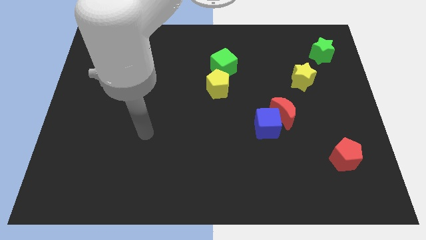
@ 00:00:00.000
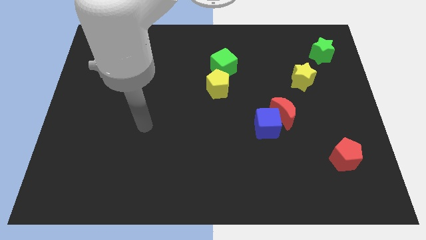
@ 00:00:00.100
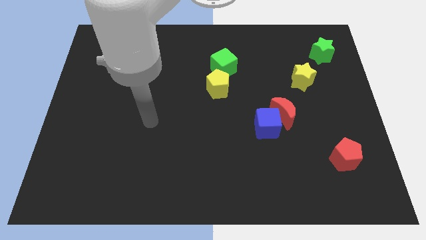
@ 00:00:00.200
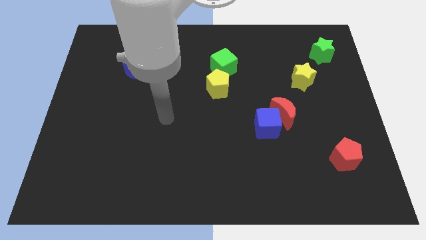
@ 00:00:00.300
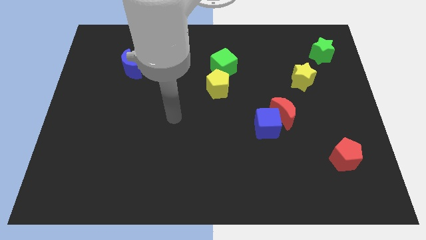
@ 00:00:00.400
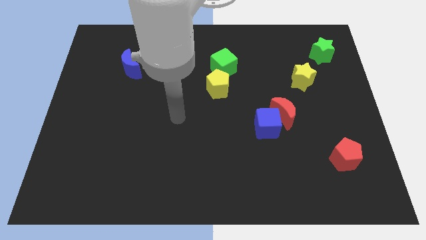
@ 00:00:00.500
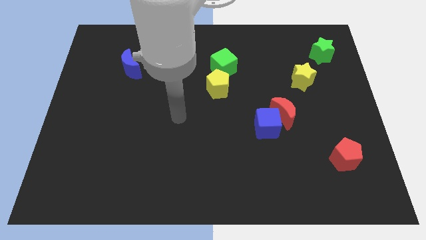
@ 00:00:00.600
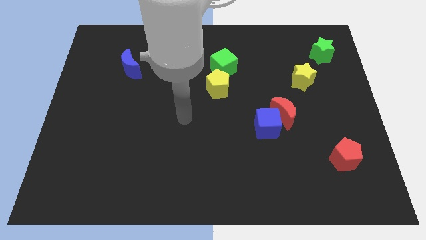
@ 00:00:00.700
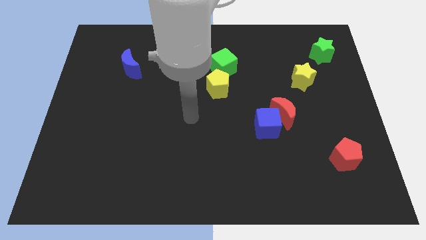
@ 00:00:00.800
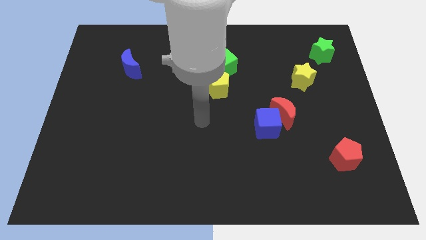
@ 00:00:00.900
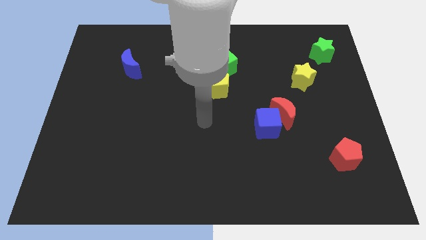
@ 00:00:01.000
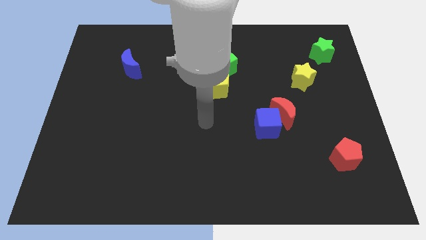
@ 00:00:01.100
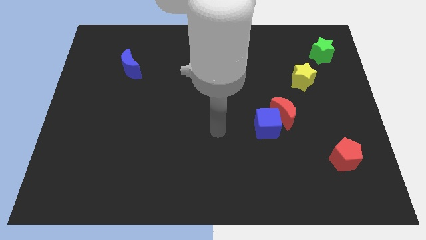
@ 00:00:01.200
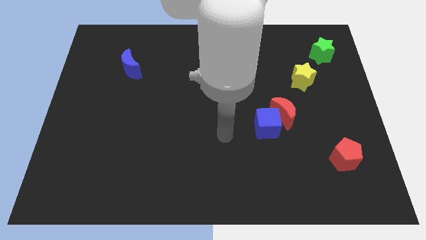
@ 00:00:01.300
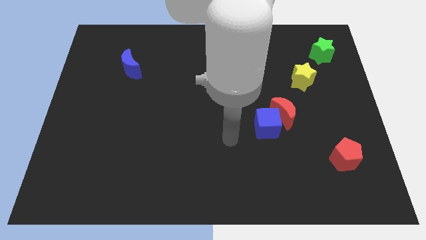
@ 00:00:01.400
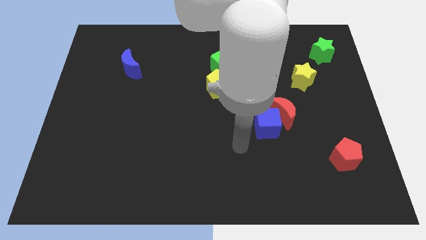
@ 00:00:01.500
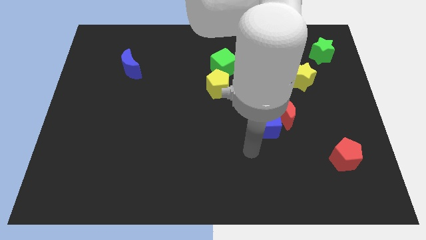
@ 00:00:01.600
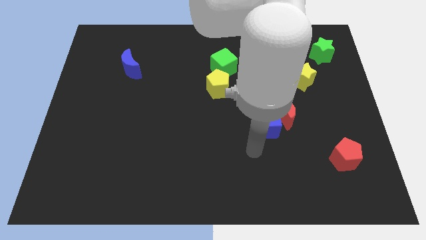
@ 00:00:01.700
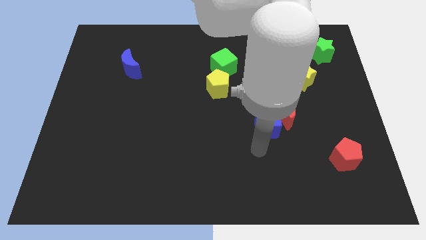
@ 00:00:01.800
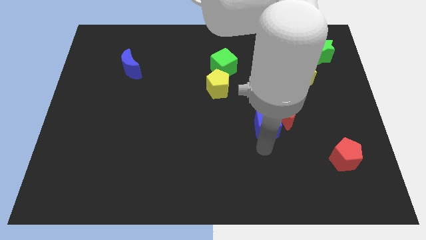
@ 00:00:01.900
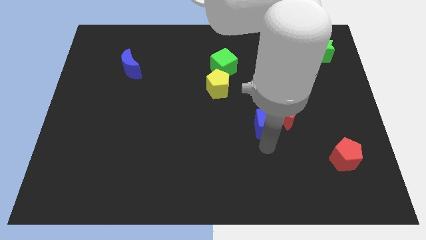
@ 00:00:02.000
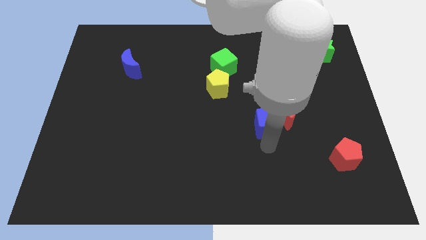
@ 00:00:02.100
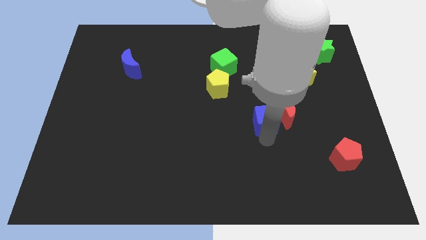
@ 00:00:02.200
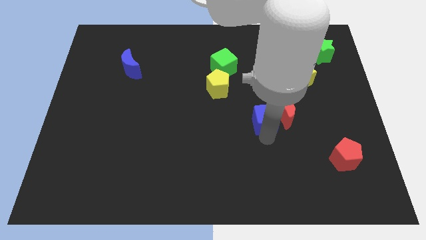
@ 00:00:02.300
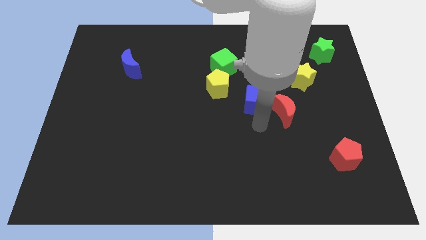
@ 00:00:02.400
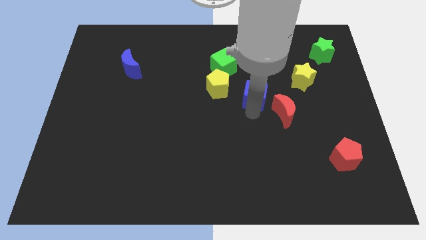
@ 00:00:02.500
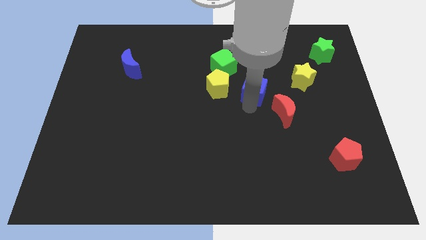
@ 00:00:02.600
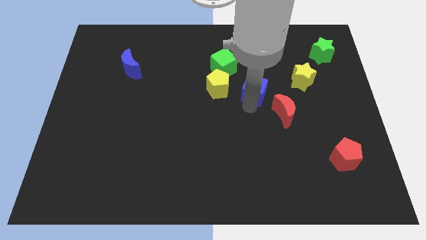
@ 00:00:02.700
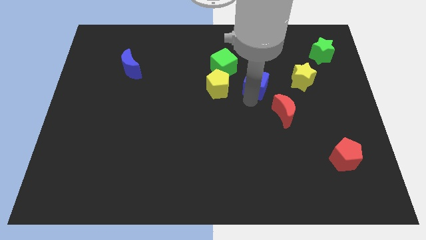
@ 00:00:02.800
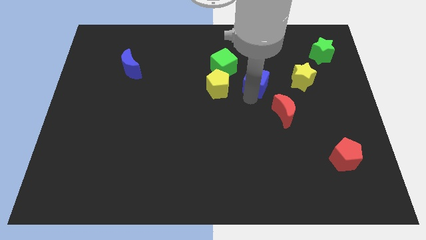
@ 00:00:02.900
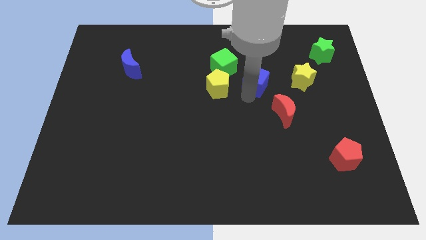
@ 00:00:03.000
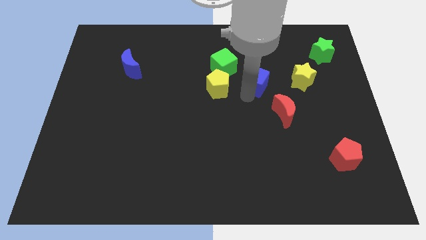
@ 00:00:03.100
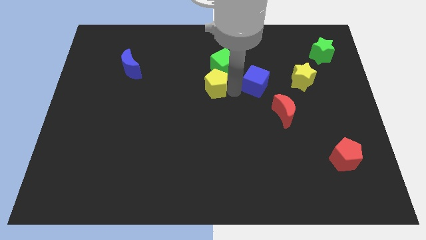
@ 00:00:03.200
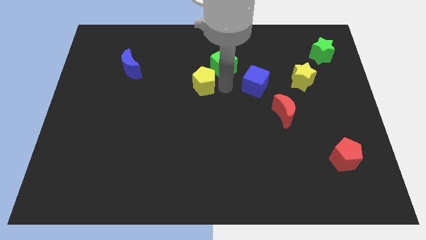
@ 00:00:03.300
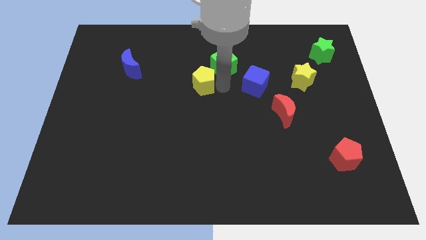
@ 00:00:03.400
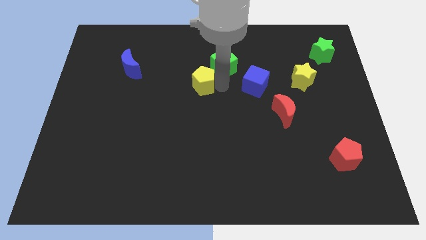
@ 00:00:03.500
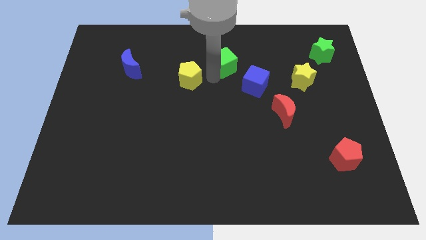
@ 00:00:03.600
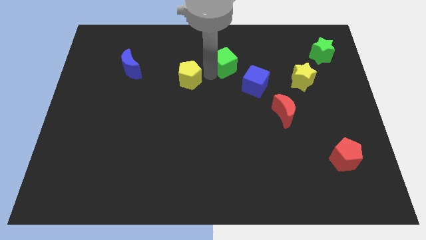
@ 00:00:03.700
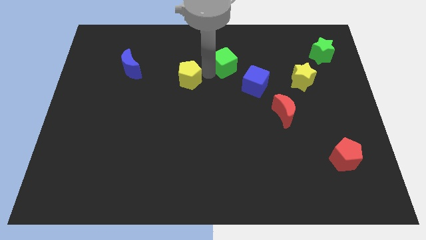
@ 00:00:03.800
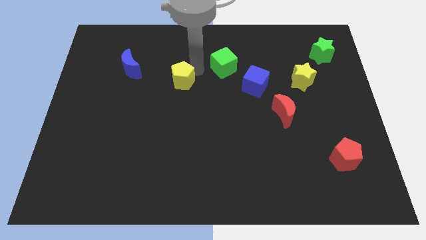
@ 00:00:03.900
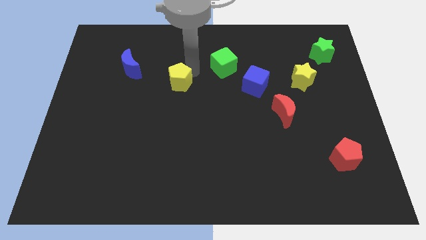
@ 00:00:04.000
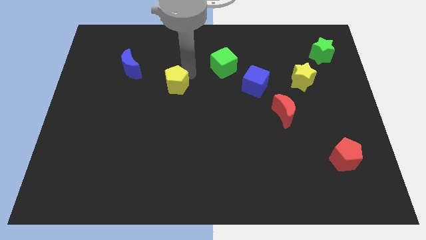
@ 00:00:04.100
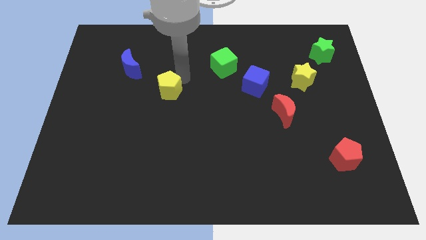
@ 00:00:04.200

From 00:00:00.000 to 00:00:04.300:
move your arm close to the yellow pentagon

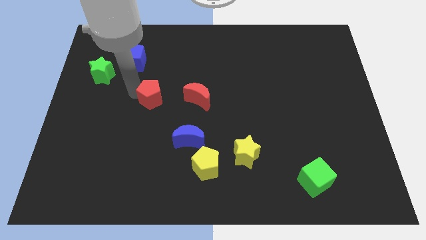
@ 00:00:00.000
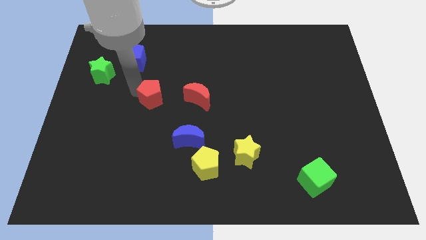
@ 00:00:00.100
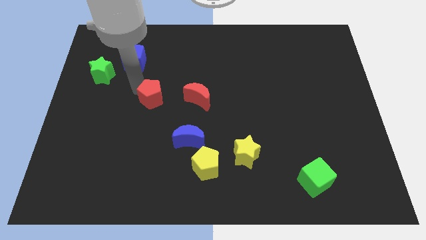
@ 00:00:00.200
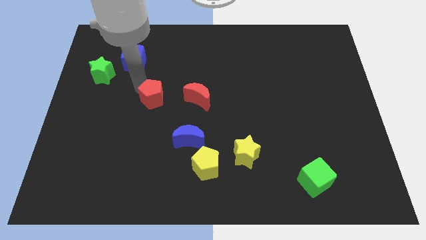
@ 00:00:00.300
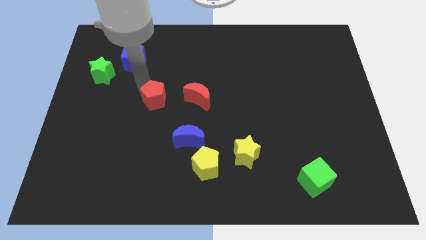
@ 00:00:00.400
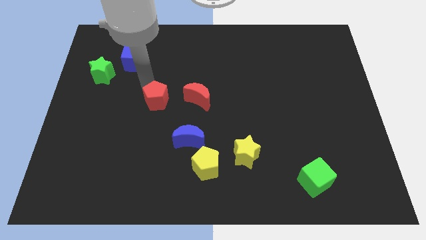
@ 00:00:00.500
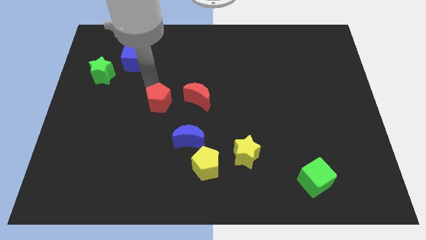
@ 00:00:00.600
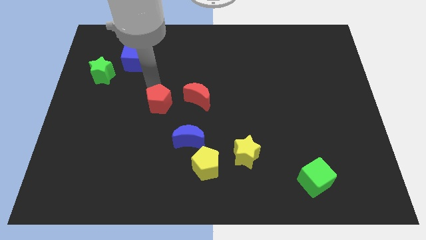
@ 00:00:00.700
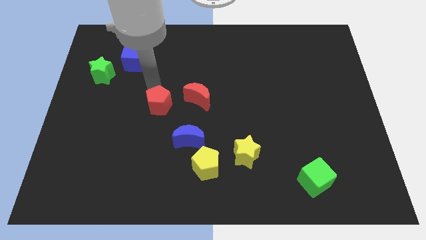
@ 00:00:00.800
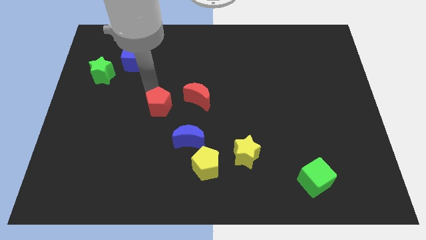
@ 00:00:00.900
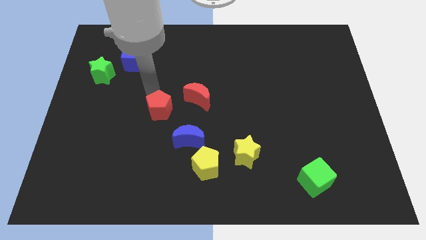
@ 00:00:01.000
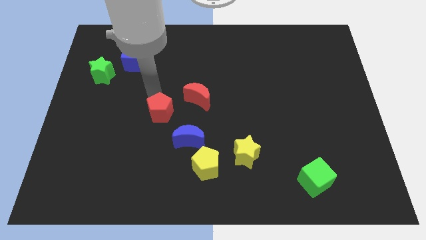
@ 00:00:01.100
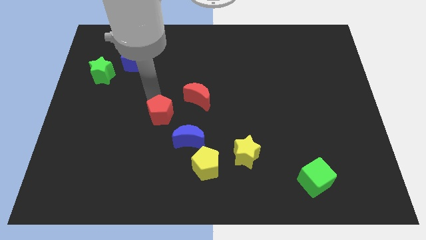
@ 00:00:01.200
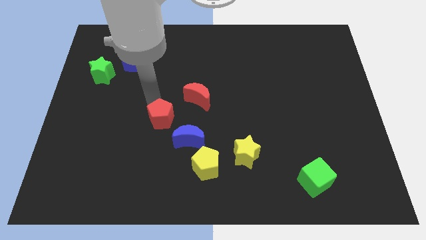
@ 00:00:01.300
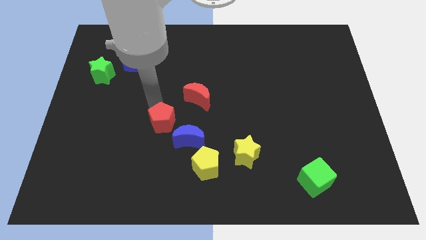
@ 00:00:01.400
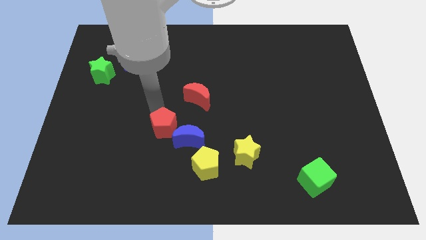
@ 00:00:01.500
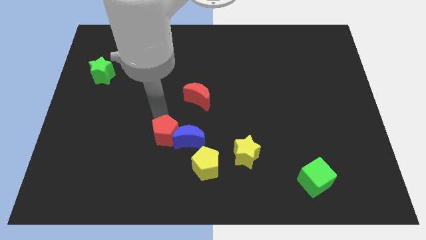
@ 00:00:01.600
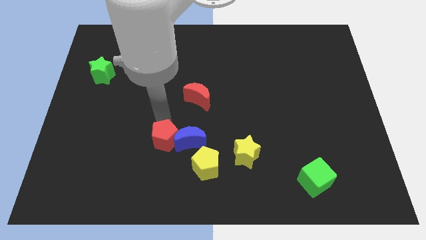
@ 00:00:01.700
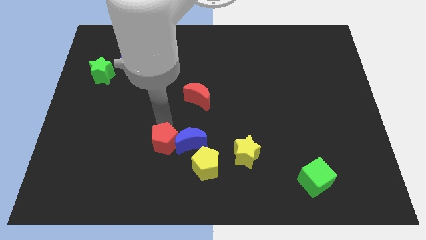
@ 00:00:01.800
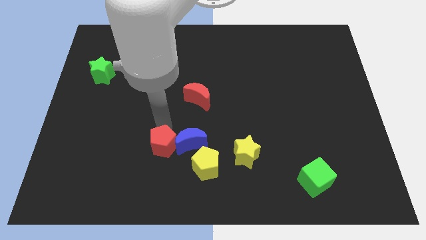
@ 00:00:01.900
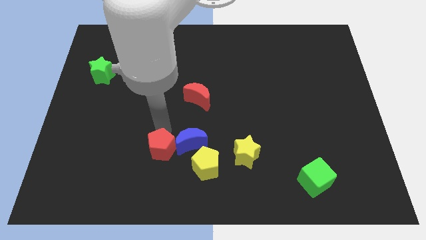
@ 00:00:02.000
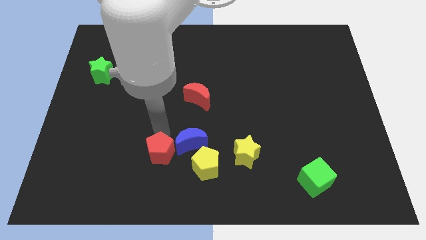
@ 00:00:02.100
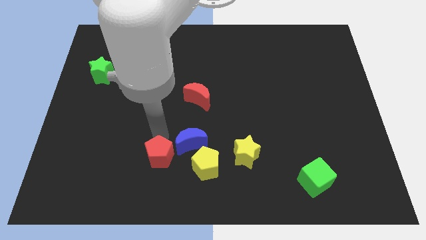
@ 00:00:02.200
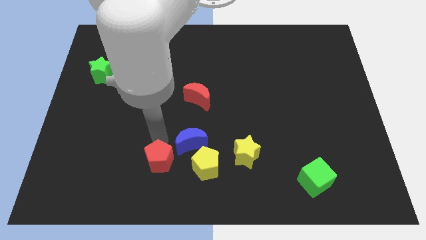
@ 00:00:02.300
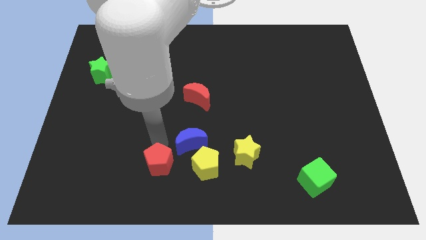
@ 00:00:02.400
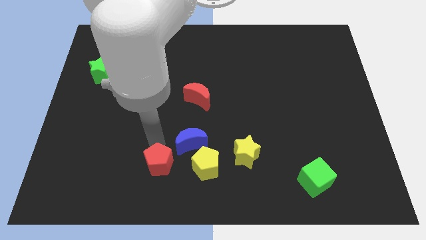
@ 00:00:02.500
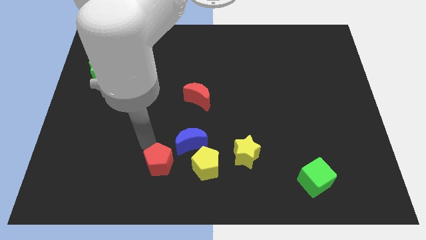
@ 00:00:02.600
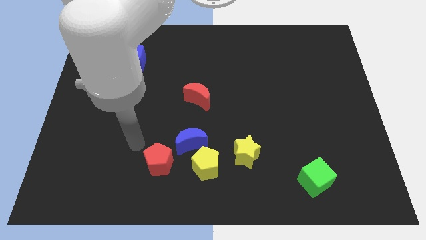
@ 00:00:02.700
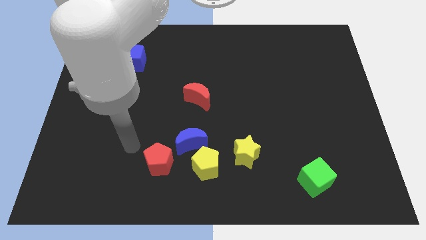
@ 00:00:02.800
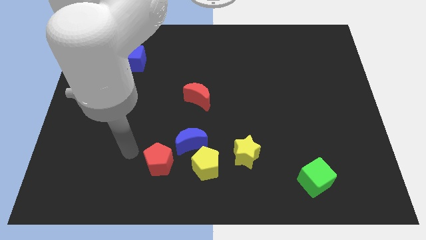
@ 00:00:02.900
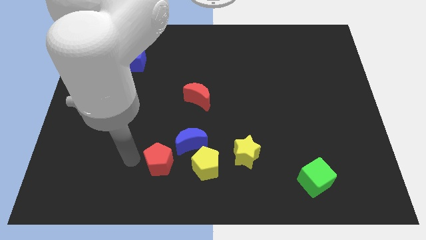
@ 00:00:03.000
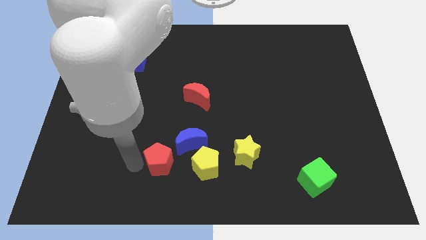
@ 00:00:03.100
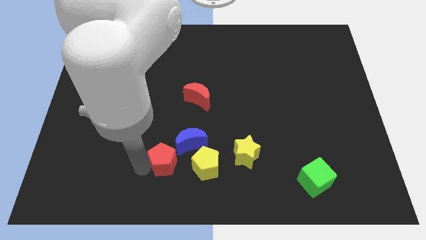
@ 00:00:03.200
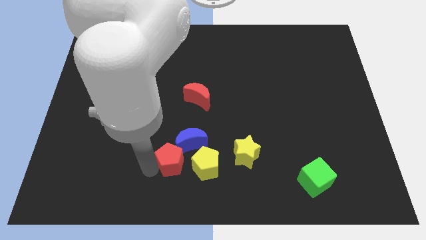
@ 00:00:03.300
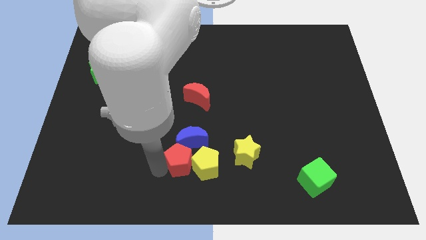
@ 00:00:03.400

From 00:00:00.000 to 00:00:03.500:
slide the red pentagon to the left side of the yellow penatgon

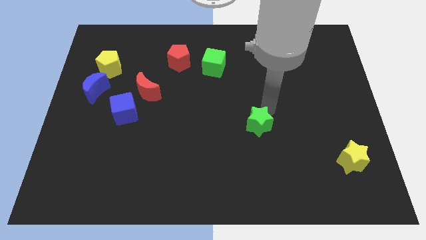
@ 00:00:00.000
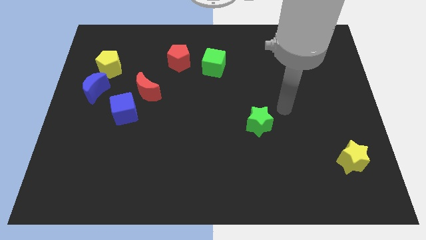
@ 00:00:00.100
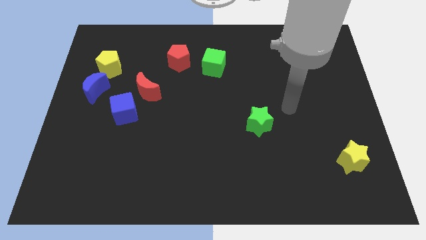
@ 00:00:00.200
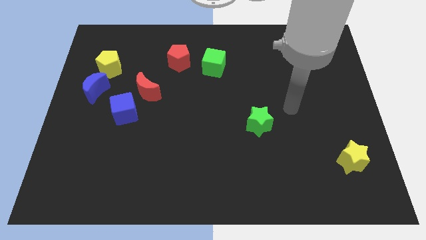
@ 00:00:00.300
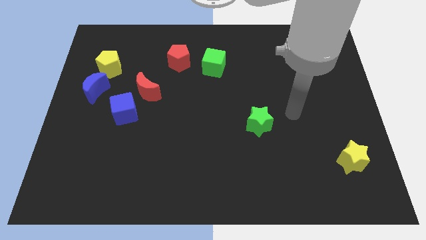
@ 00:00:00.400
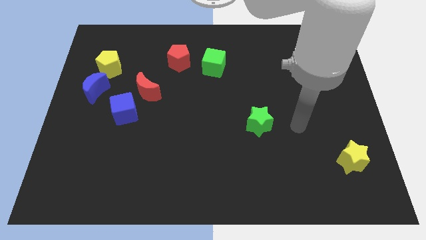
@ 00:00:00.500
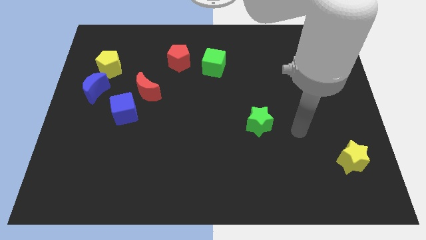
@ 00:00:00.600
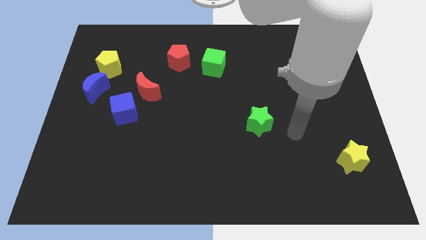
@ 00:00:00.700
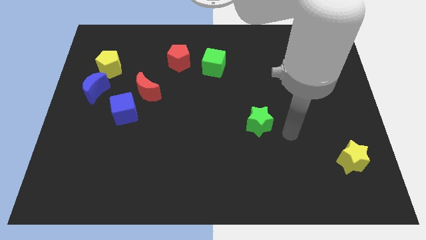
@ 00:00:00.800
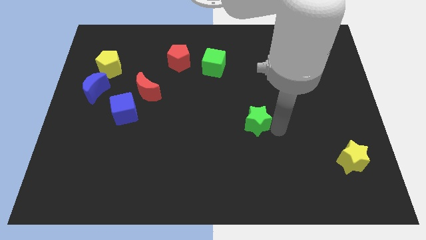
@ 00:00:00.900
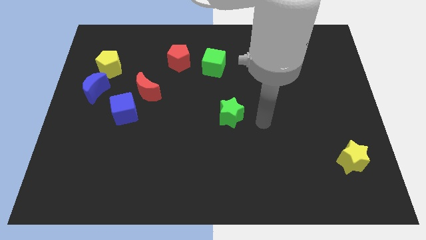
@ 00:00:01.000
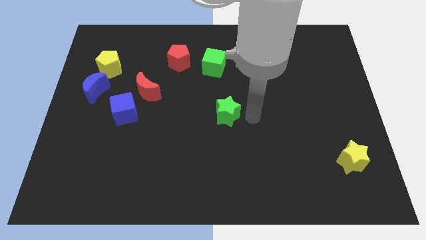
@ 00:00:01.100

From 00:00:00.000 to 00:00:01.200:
move green star to the center of the board
